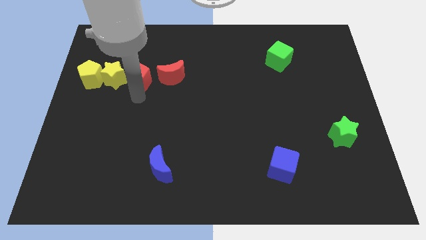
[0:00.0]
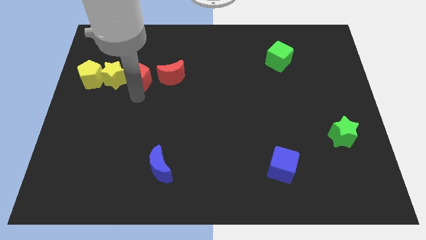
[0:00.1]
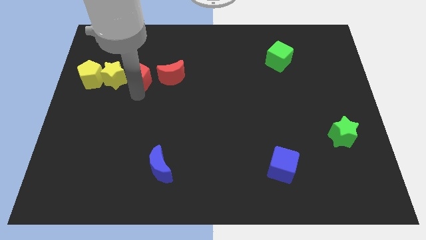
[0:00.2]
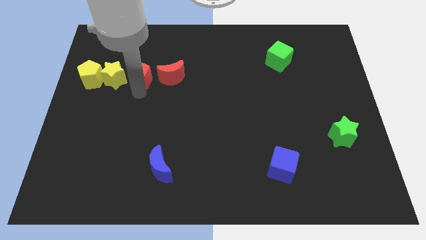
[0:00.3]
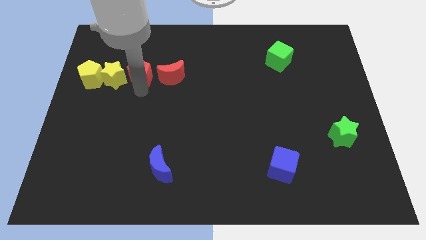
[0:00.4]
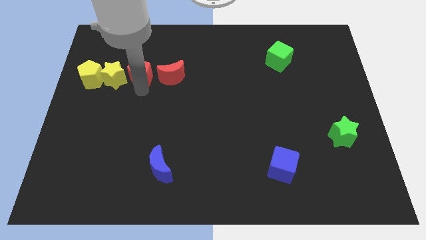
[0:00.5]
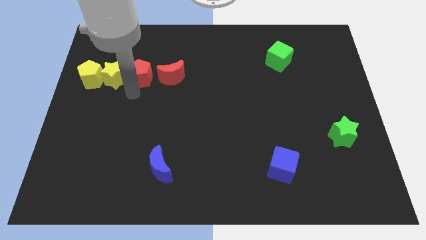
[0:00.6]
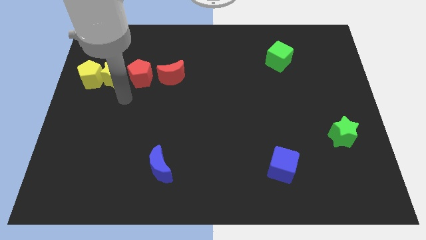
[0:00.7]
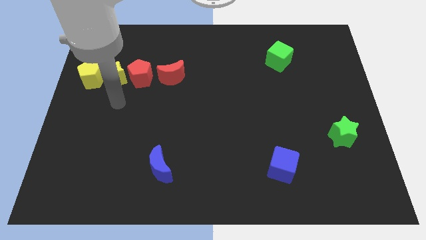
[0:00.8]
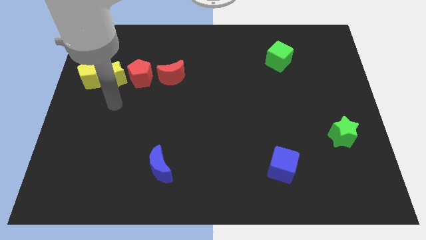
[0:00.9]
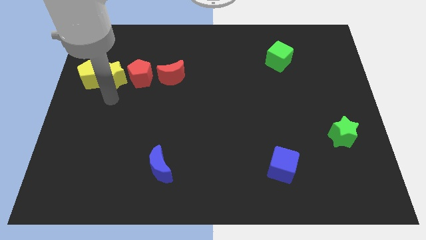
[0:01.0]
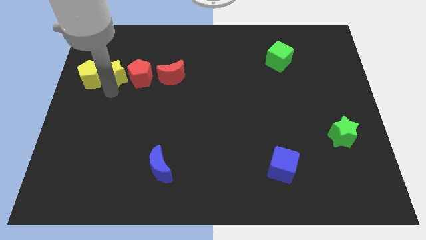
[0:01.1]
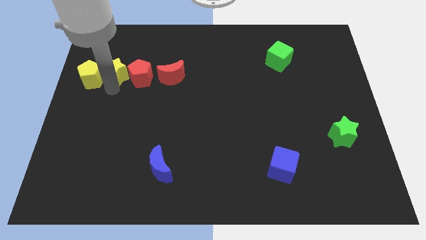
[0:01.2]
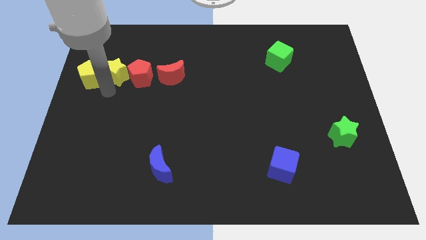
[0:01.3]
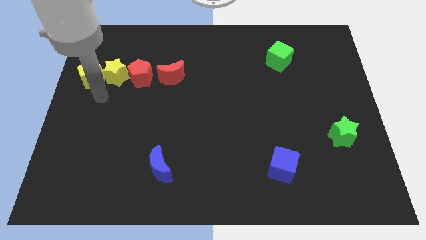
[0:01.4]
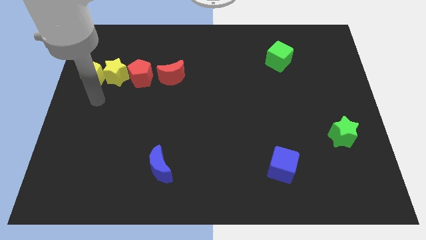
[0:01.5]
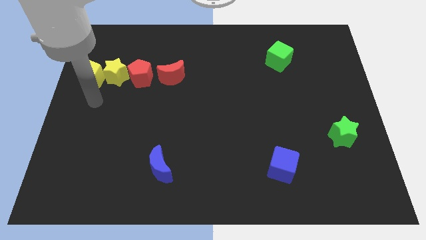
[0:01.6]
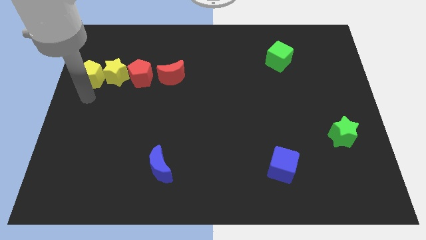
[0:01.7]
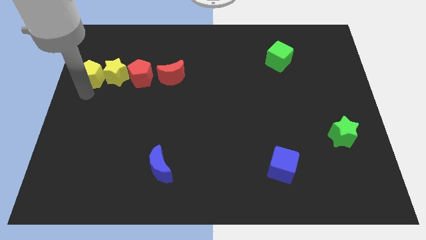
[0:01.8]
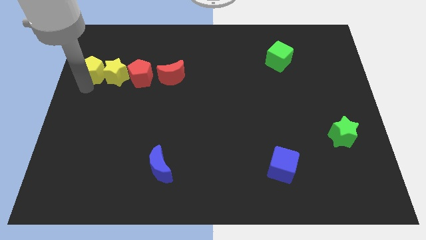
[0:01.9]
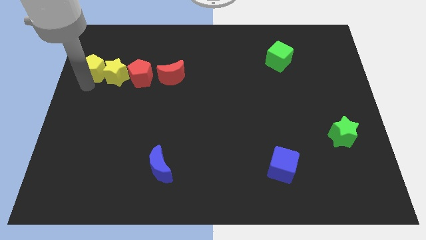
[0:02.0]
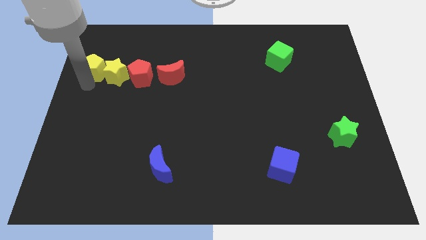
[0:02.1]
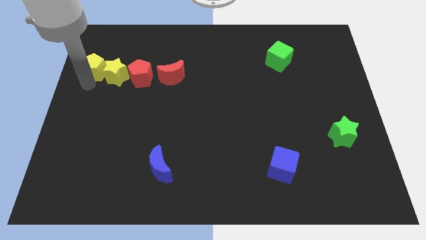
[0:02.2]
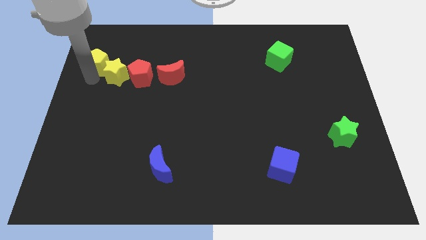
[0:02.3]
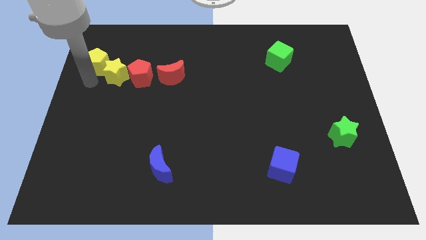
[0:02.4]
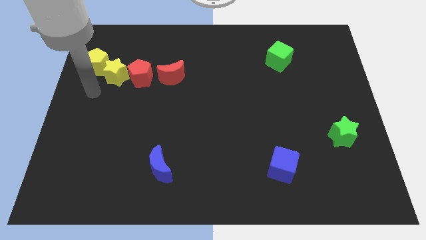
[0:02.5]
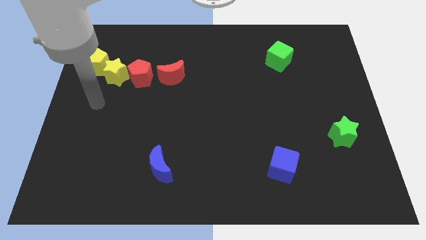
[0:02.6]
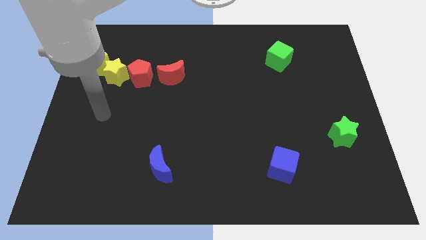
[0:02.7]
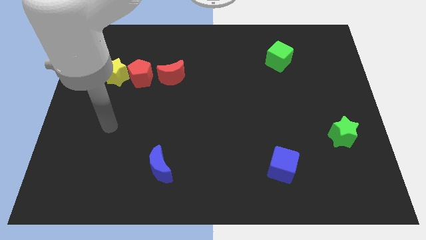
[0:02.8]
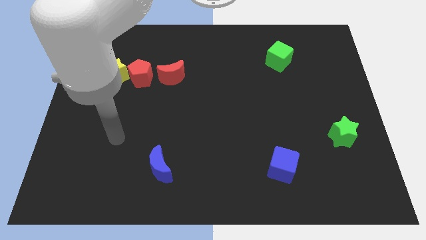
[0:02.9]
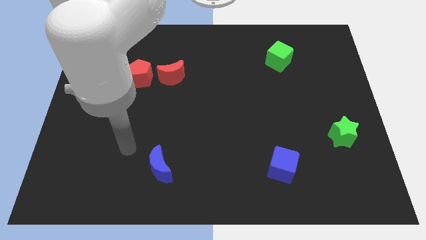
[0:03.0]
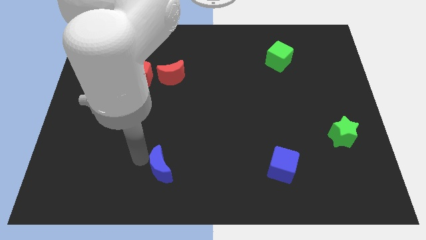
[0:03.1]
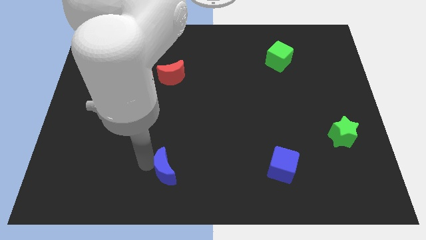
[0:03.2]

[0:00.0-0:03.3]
push the red pentagon yellow star and yellow pentagon slightly upwards and go away

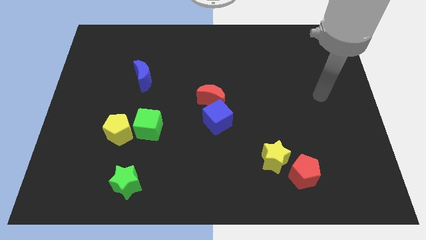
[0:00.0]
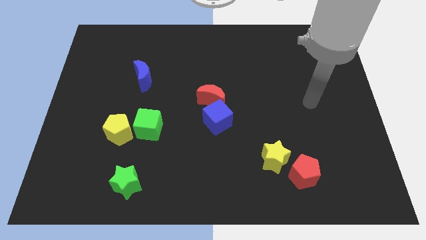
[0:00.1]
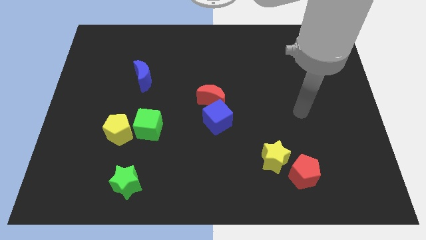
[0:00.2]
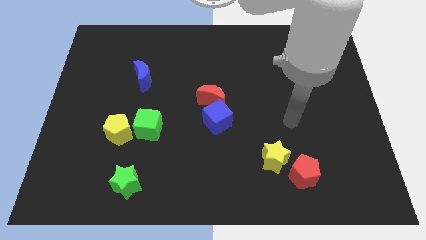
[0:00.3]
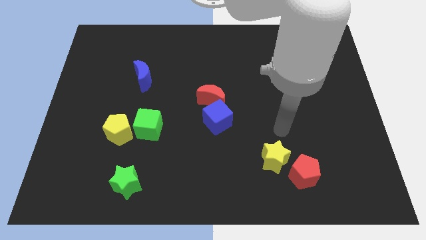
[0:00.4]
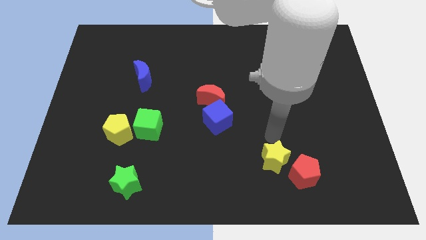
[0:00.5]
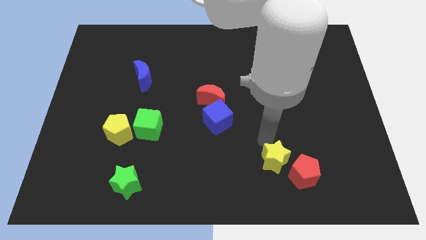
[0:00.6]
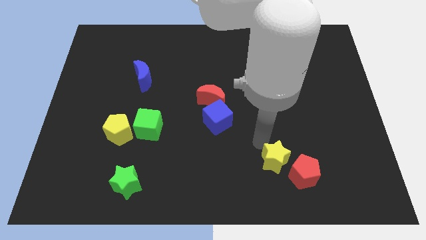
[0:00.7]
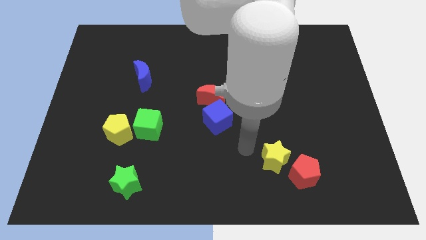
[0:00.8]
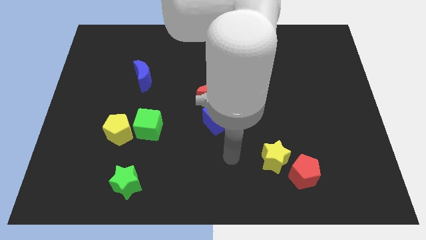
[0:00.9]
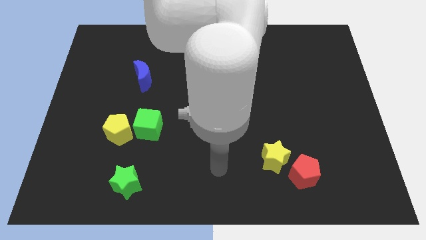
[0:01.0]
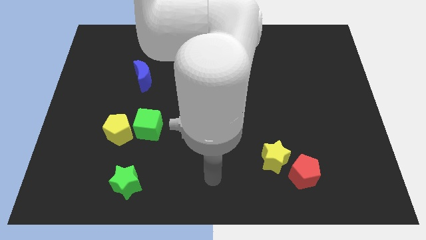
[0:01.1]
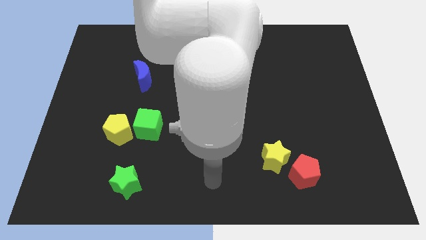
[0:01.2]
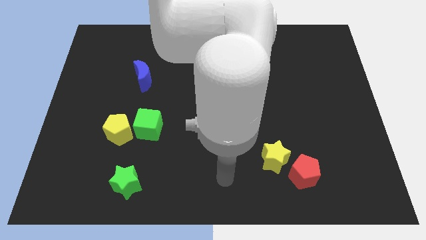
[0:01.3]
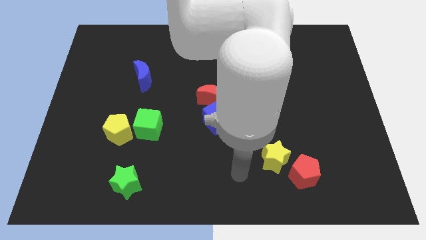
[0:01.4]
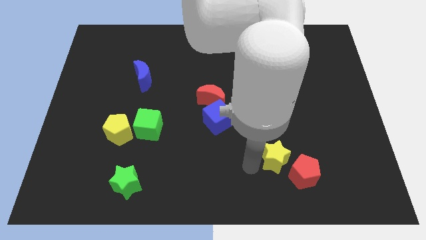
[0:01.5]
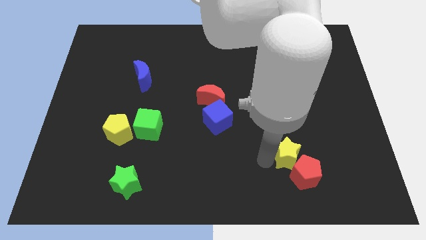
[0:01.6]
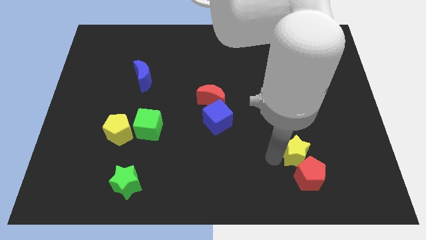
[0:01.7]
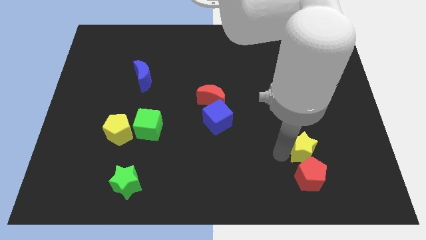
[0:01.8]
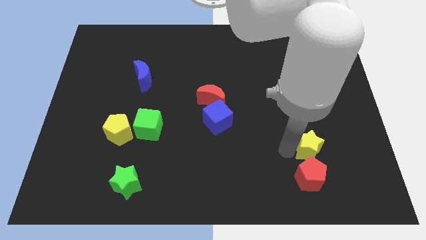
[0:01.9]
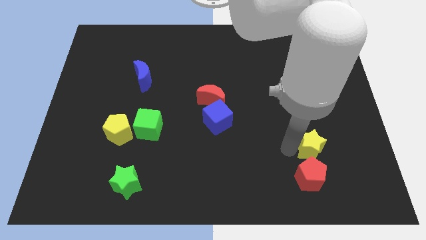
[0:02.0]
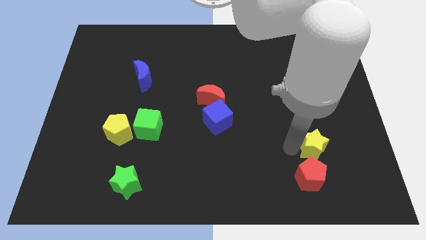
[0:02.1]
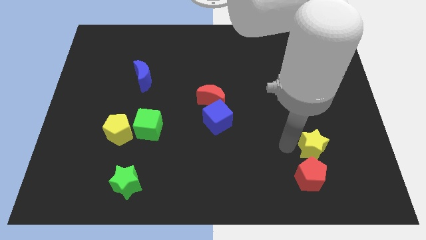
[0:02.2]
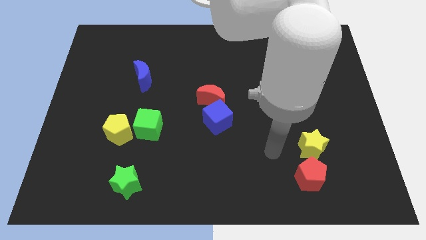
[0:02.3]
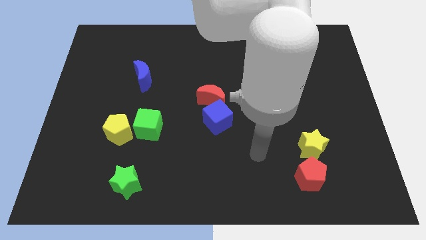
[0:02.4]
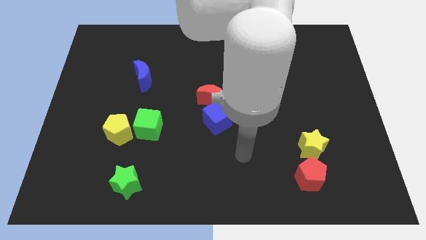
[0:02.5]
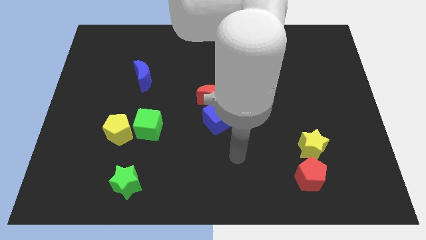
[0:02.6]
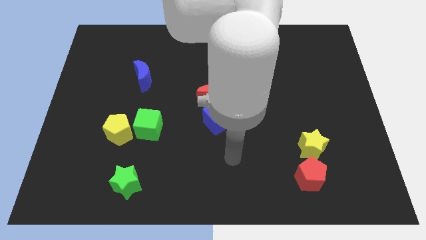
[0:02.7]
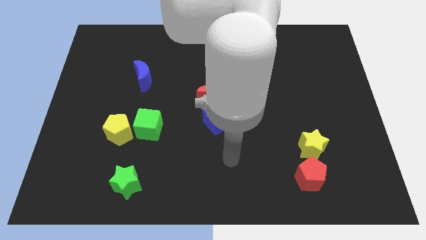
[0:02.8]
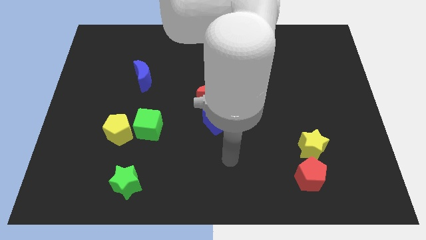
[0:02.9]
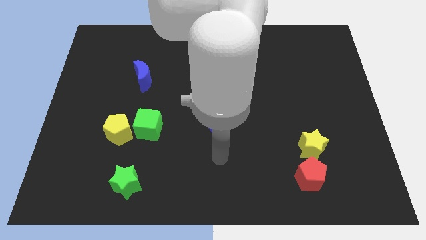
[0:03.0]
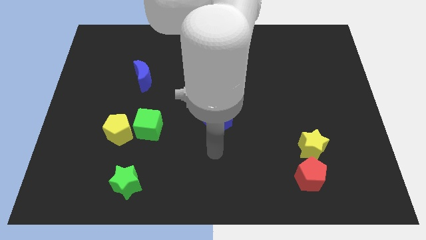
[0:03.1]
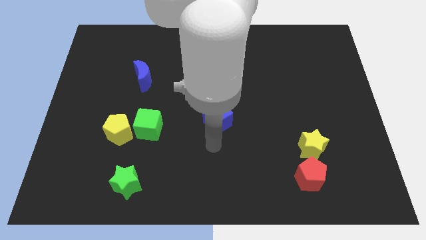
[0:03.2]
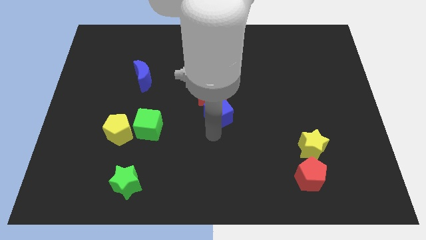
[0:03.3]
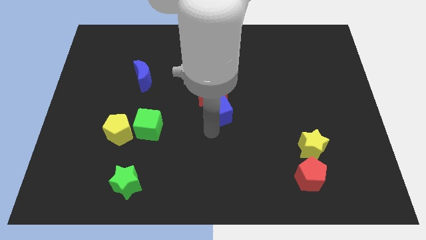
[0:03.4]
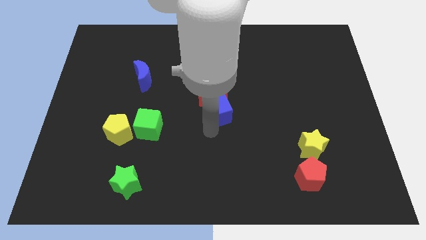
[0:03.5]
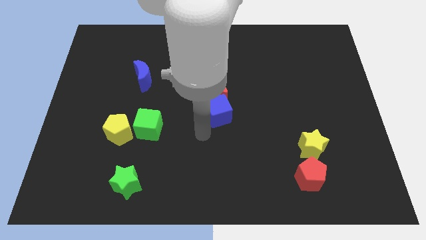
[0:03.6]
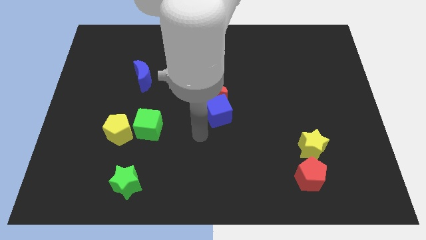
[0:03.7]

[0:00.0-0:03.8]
move the yellow star to top of the red pentagon

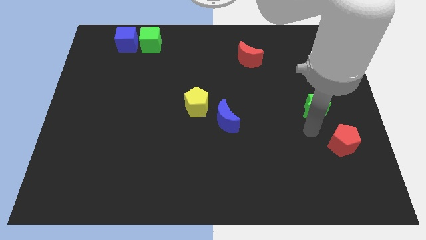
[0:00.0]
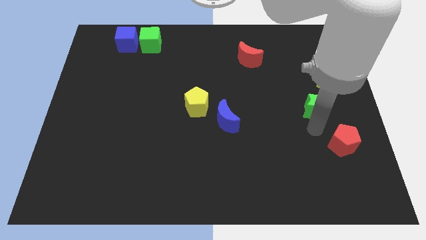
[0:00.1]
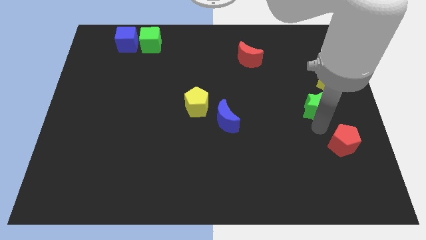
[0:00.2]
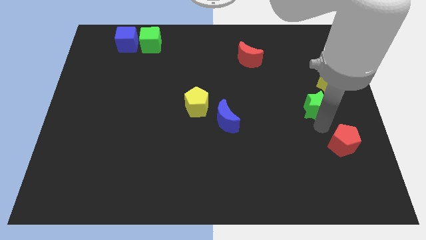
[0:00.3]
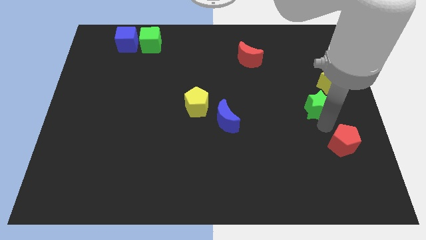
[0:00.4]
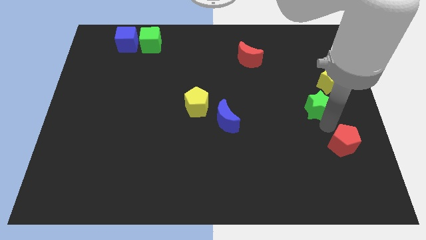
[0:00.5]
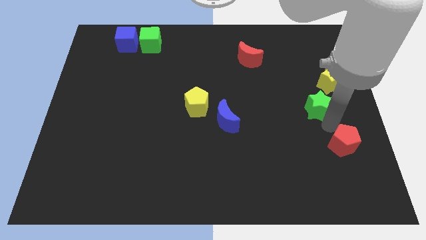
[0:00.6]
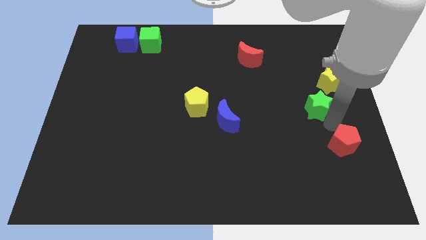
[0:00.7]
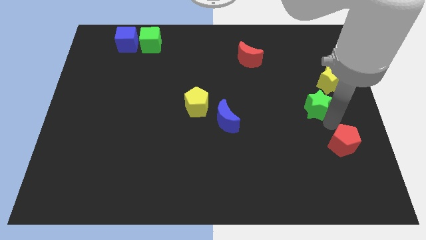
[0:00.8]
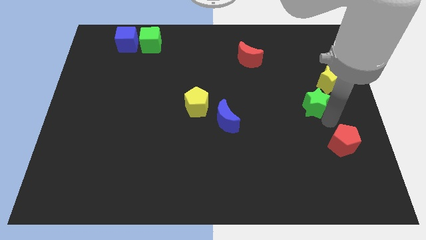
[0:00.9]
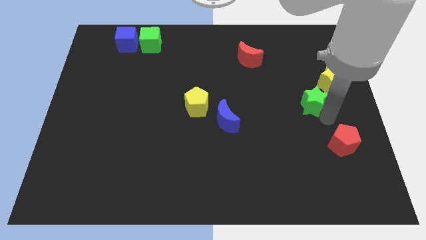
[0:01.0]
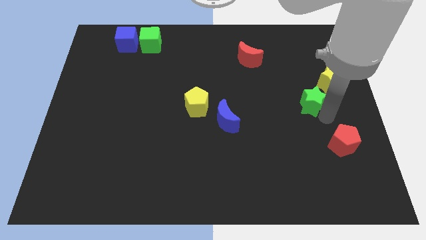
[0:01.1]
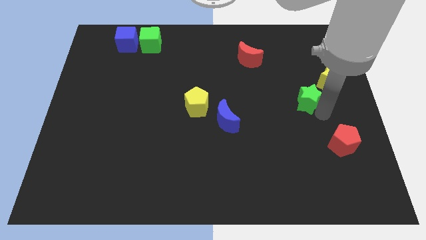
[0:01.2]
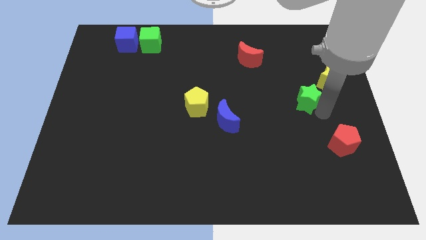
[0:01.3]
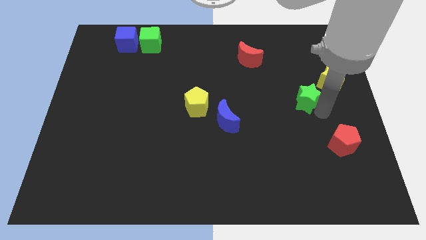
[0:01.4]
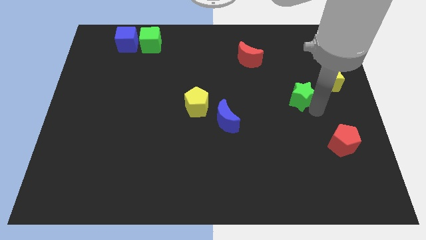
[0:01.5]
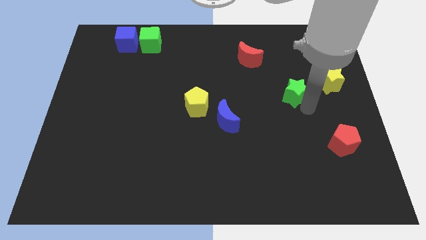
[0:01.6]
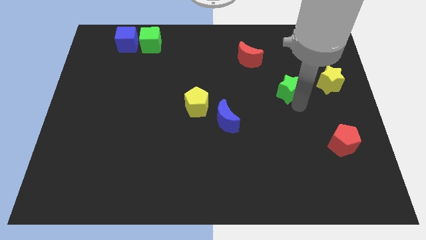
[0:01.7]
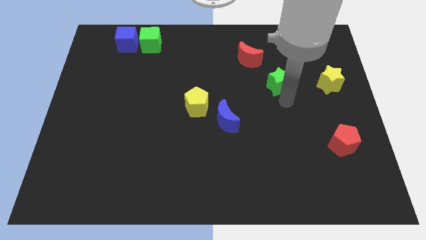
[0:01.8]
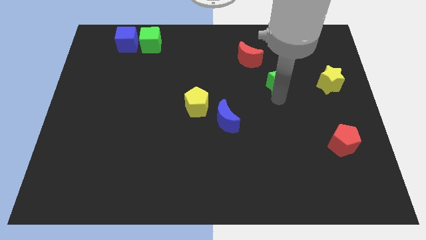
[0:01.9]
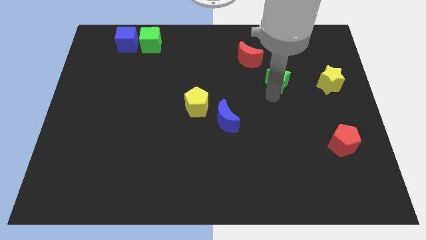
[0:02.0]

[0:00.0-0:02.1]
move green star to the left of yellow star
